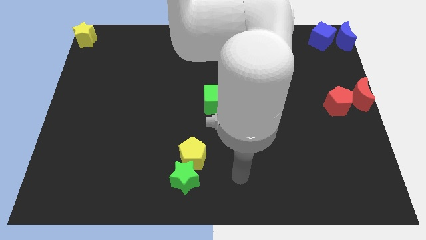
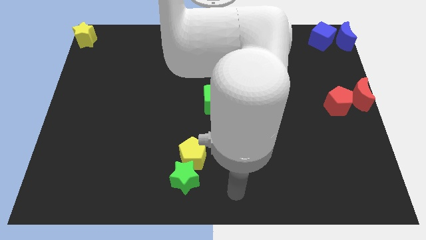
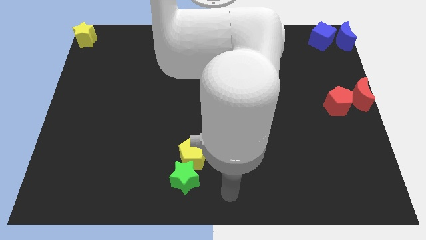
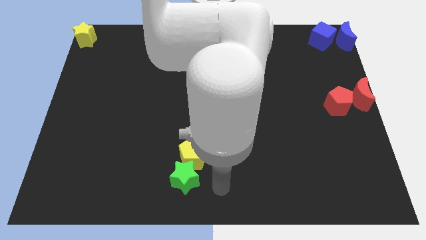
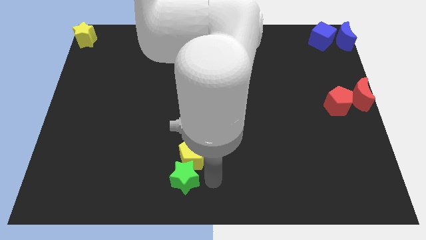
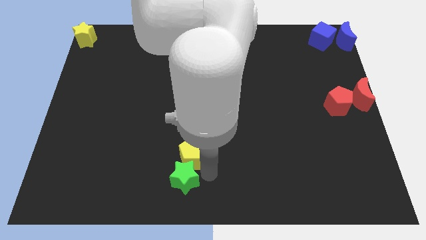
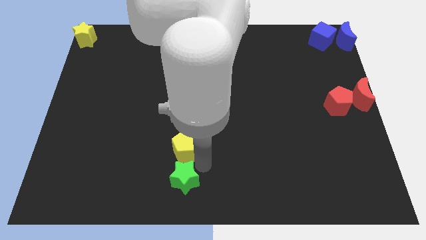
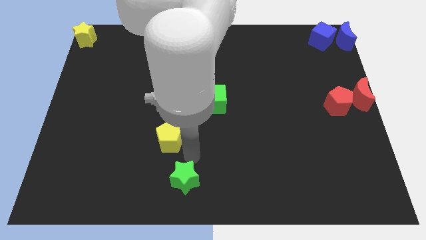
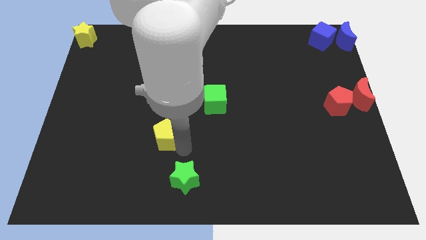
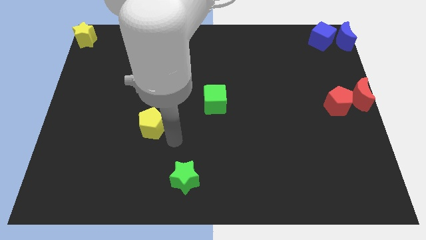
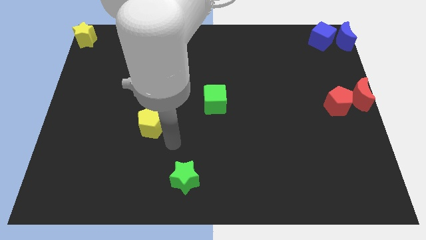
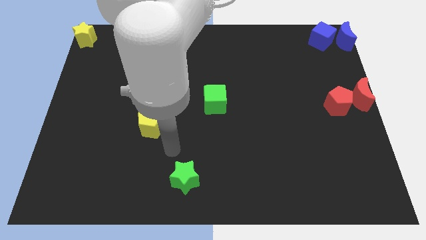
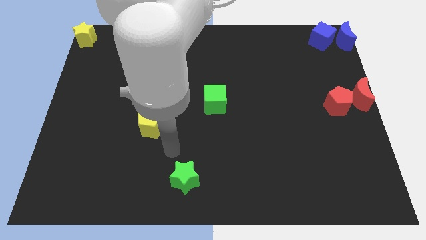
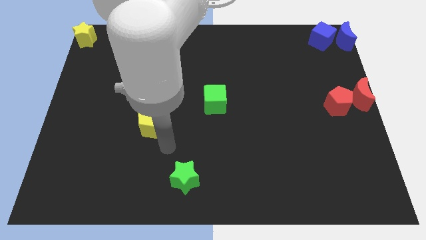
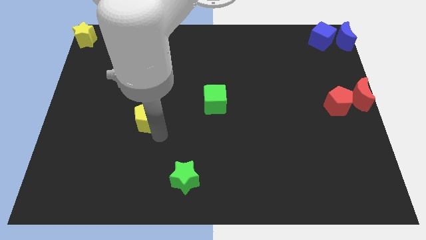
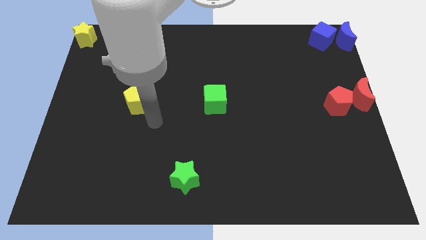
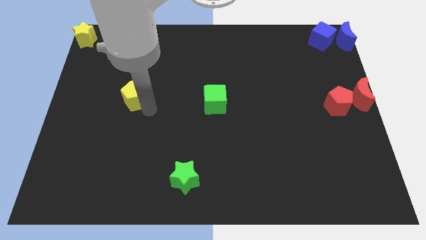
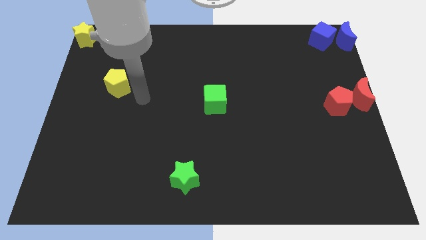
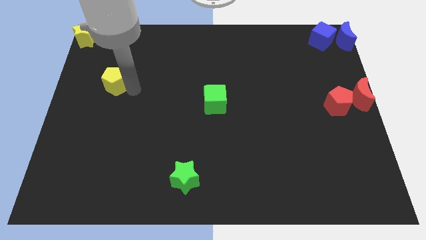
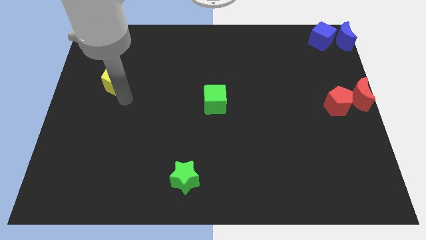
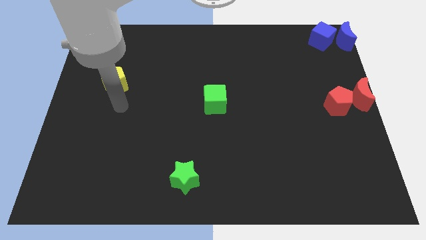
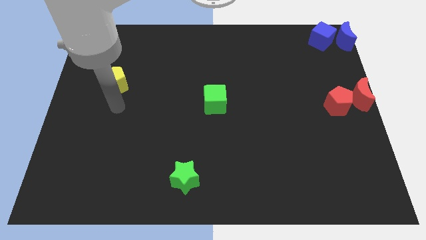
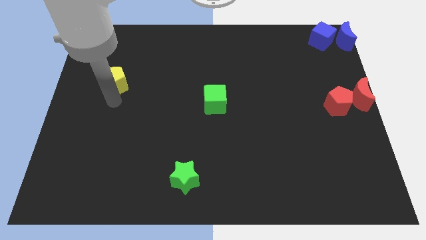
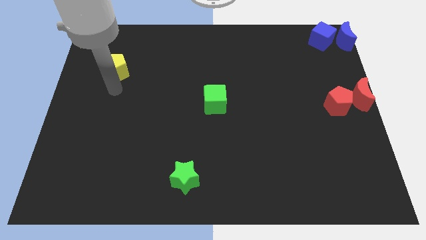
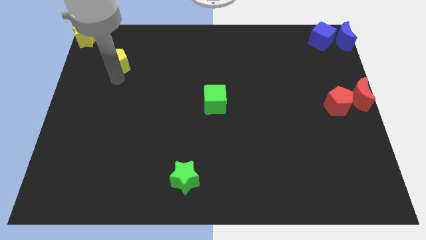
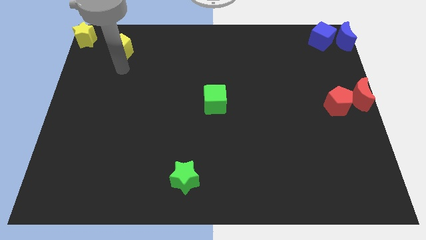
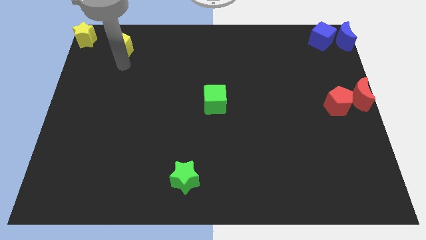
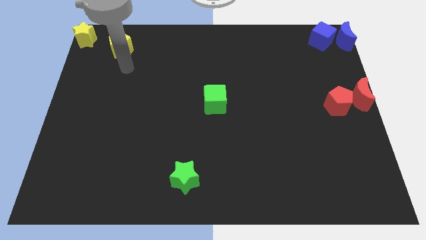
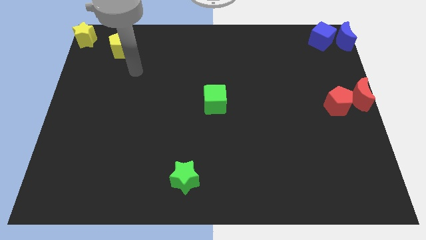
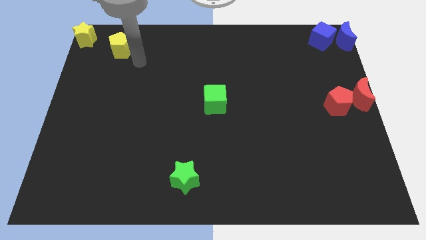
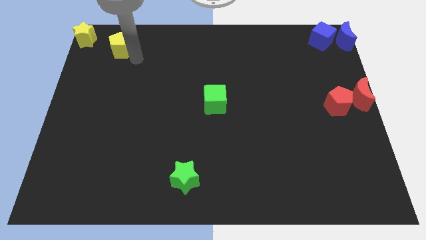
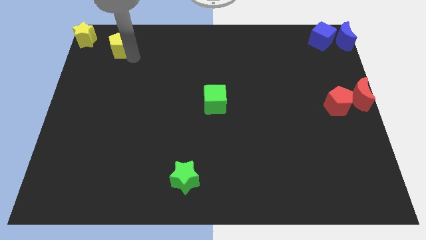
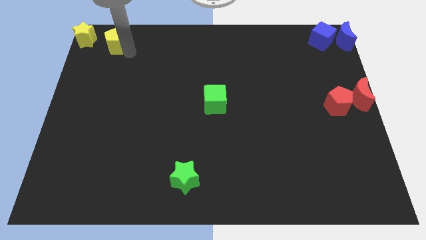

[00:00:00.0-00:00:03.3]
separate the yellow pentagon from the green star

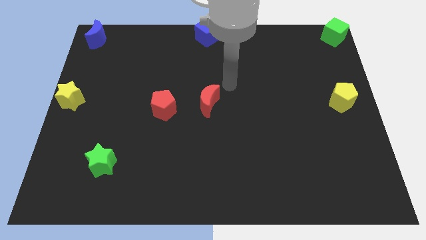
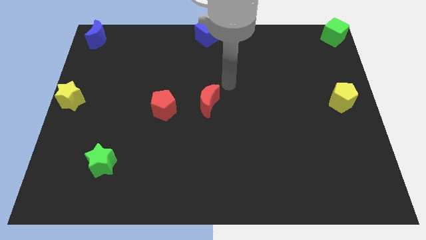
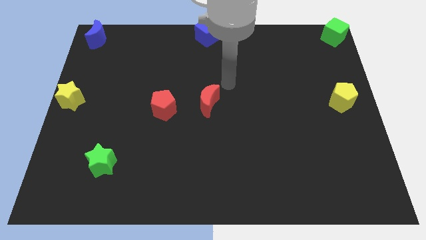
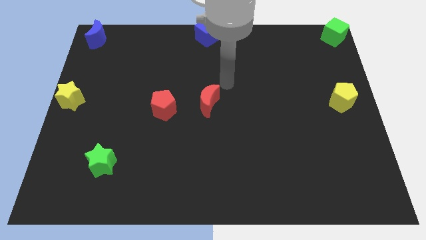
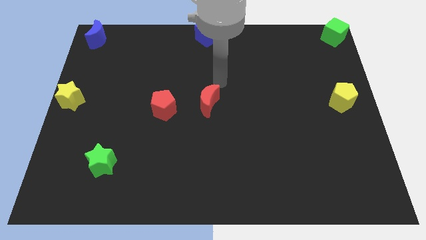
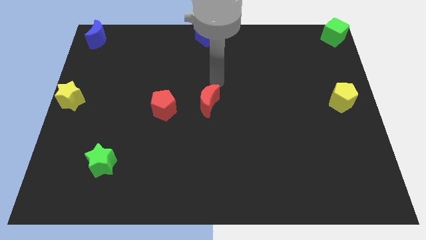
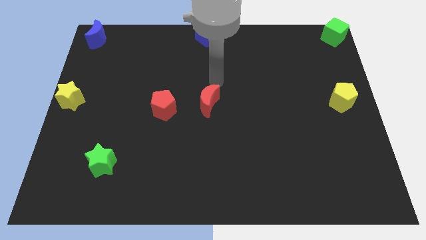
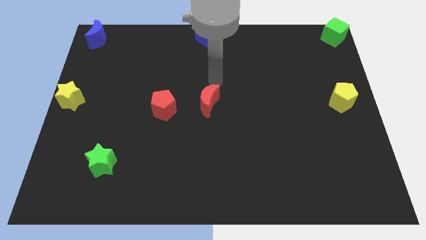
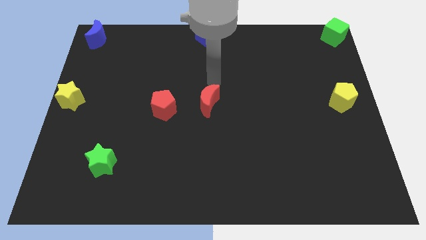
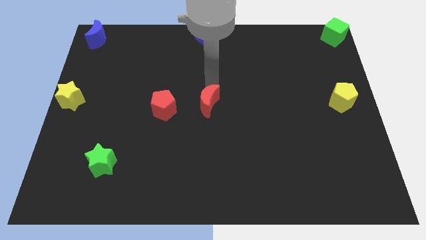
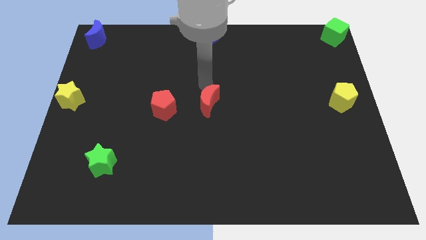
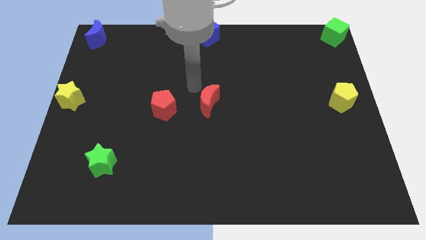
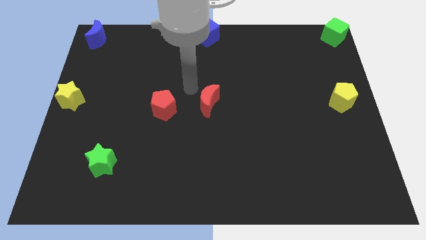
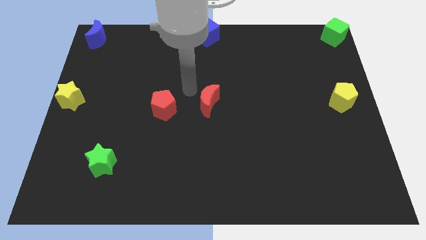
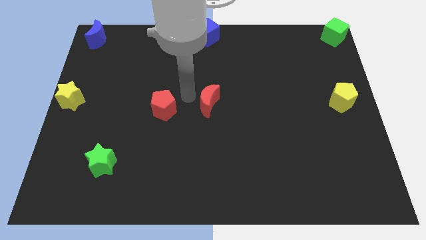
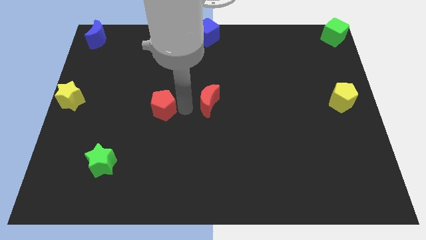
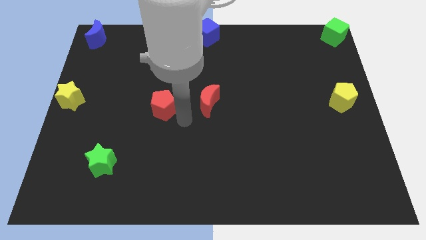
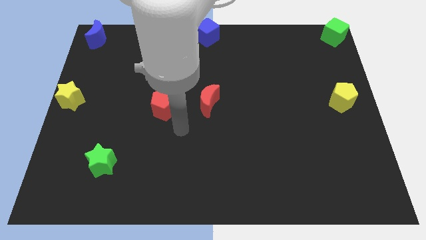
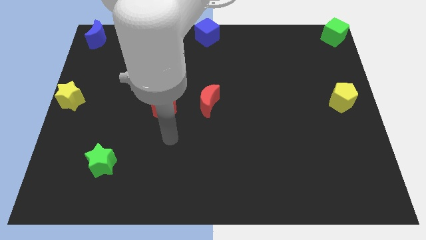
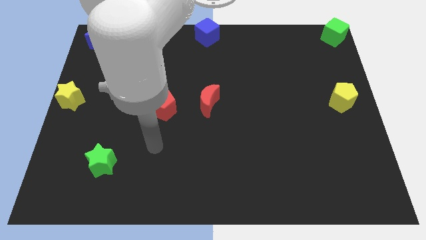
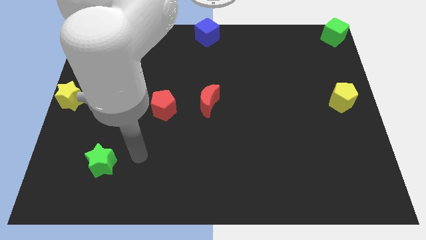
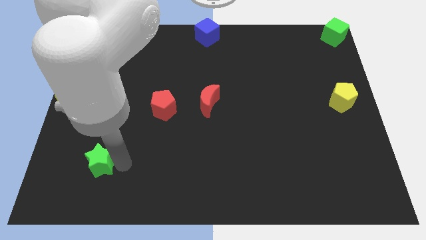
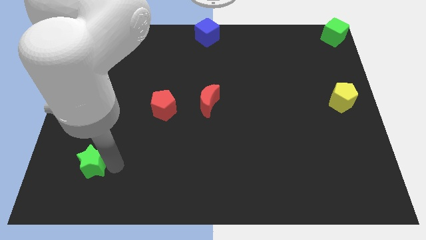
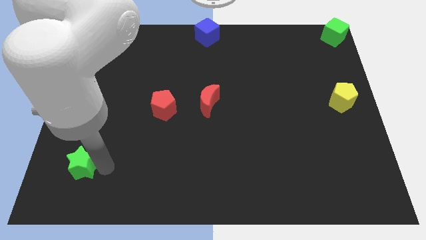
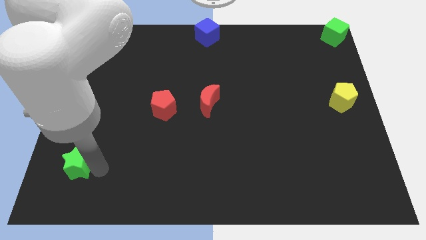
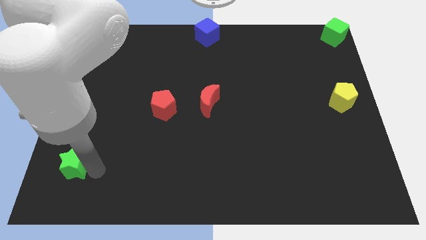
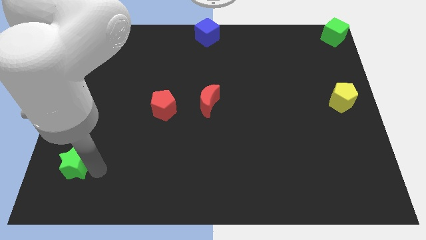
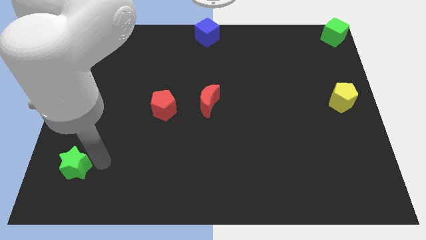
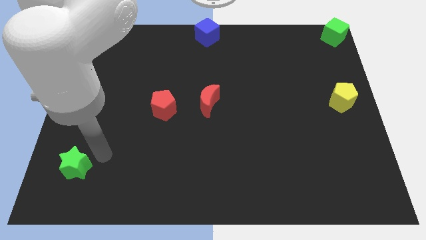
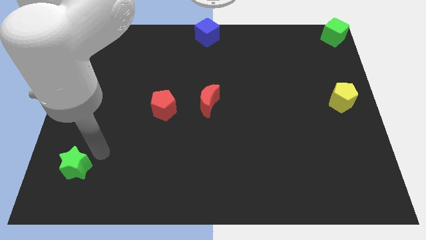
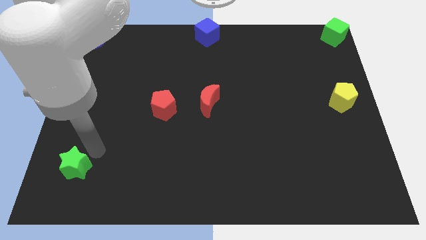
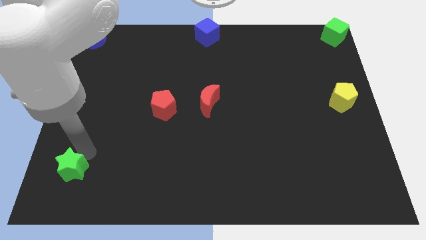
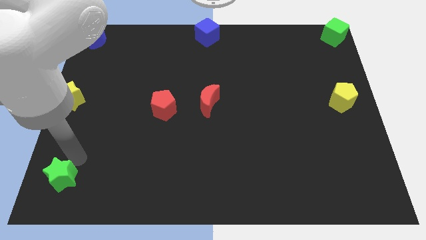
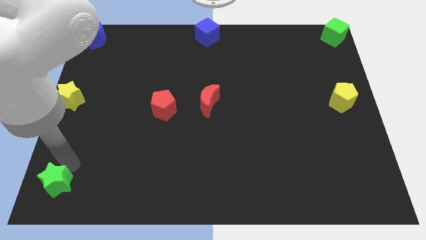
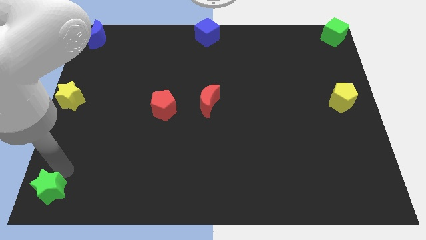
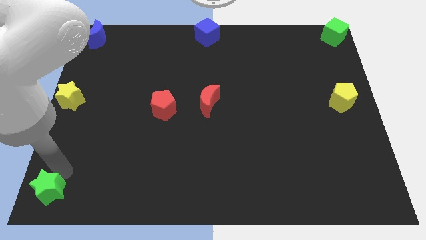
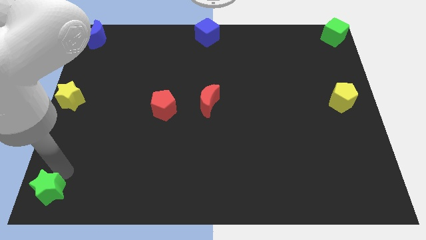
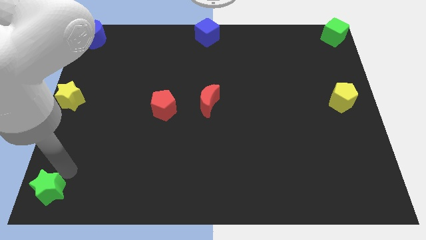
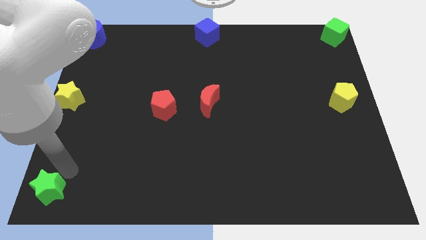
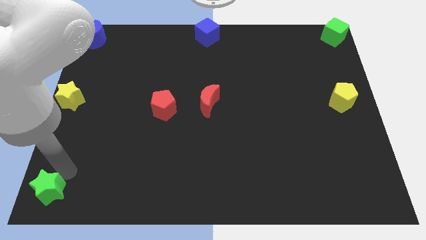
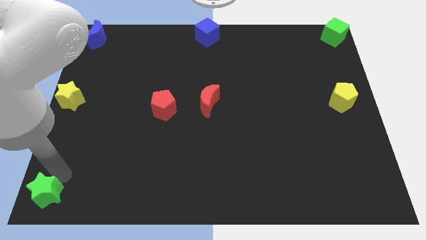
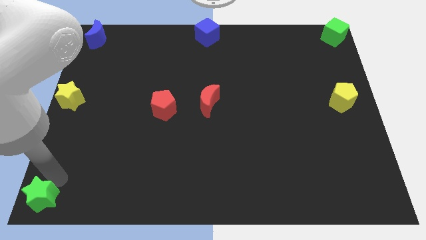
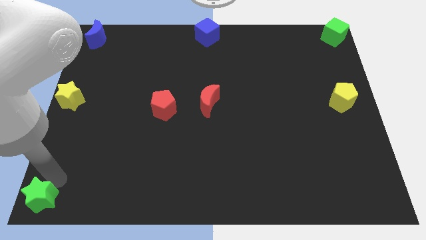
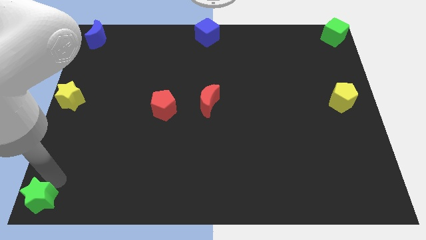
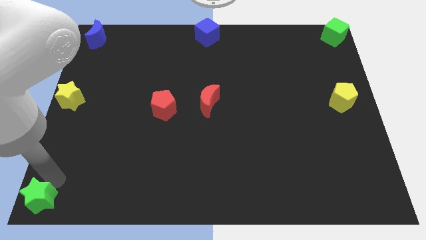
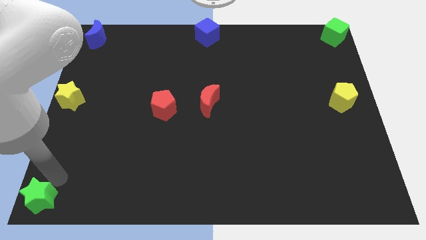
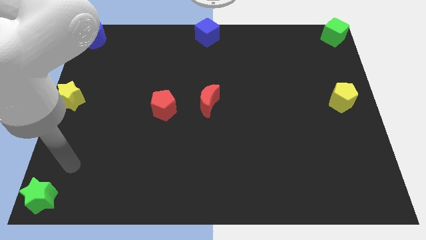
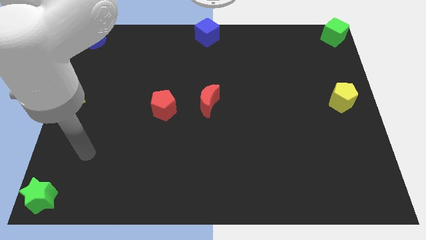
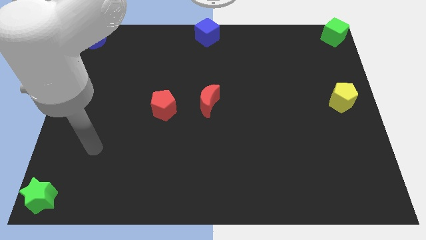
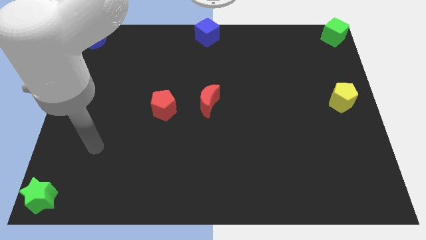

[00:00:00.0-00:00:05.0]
put the green star on the bottom left of the board

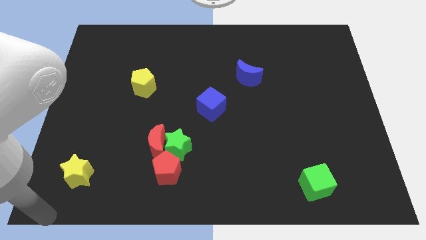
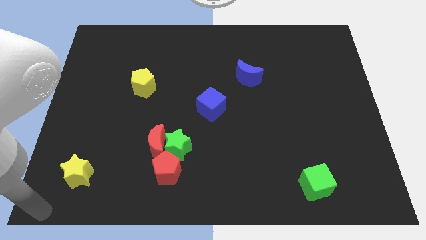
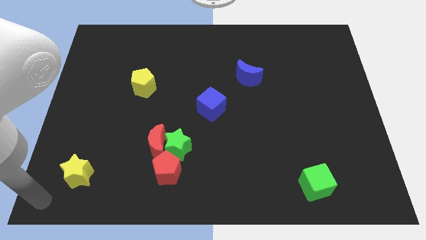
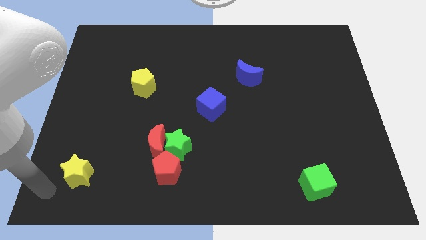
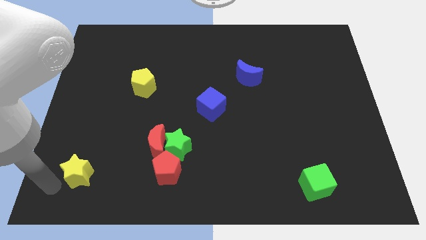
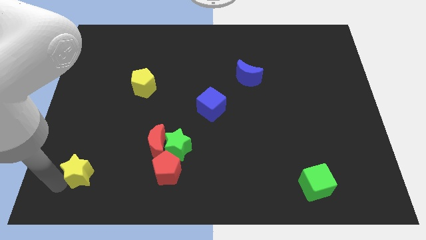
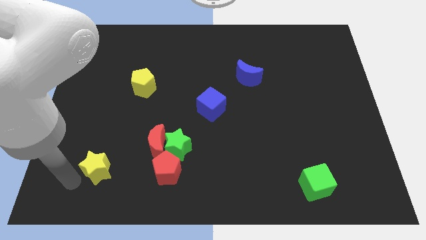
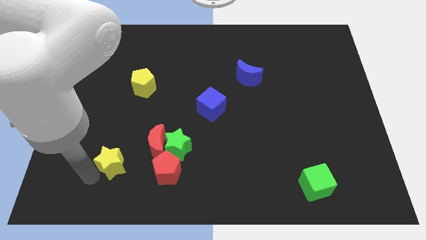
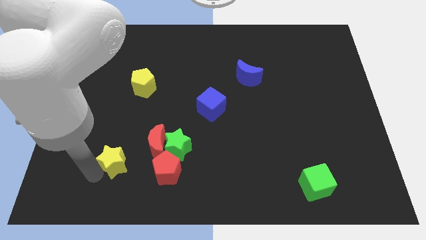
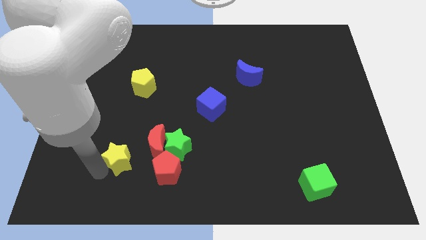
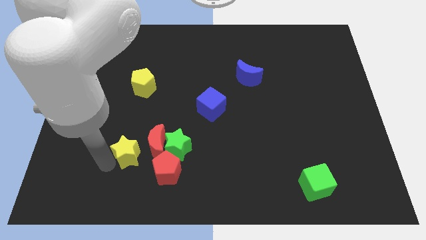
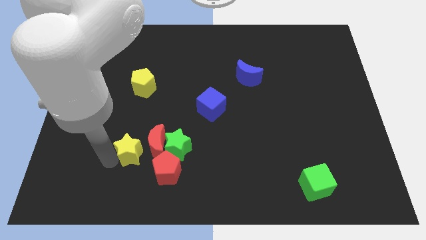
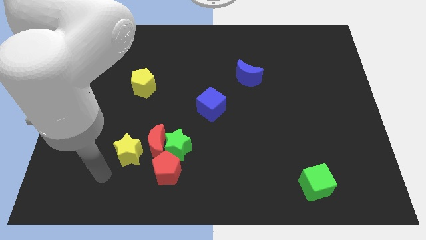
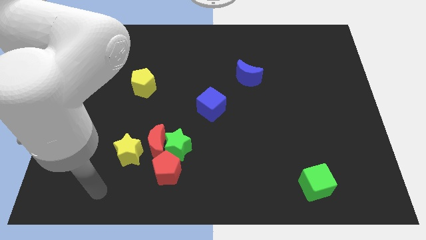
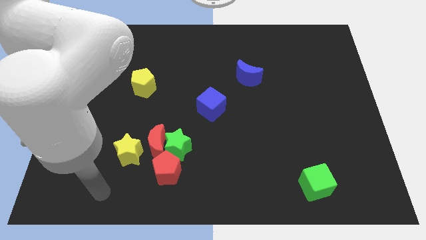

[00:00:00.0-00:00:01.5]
place the yellow star to the left of the red crescent
